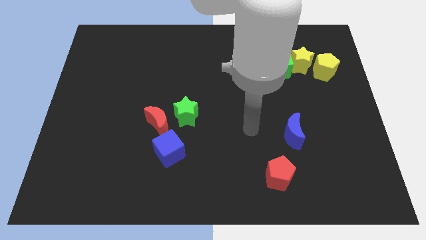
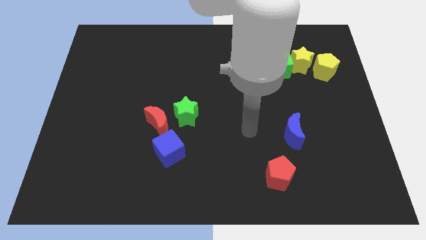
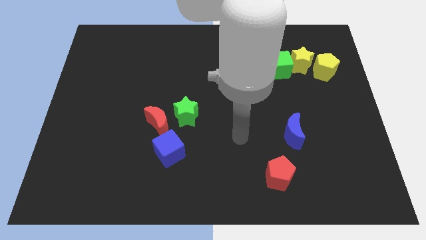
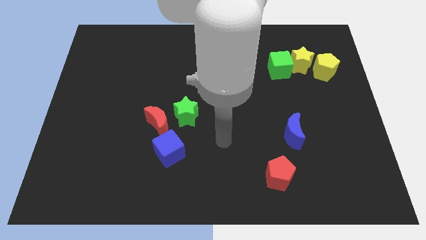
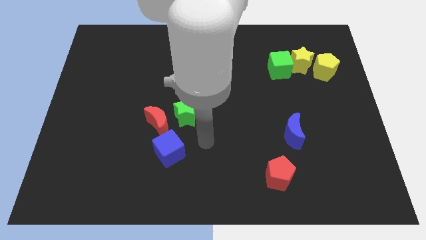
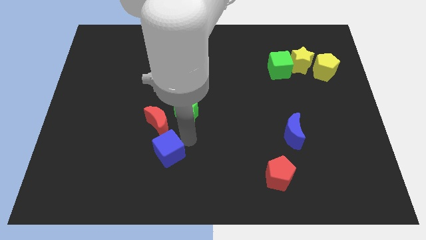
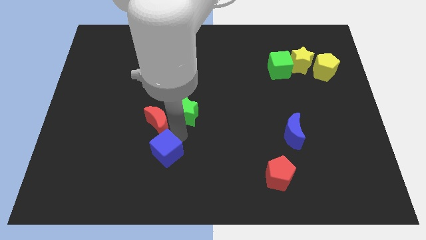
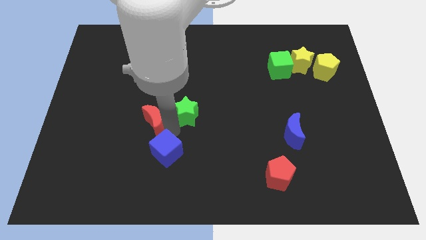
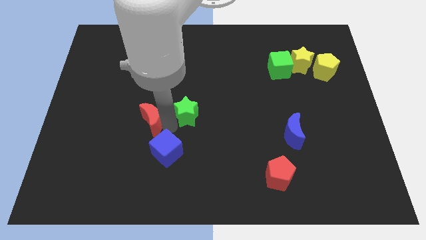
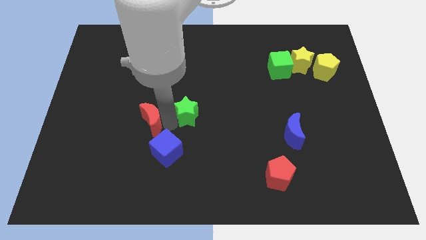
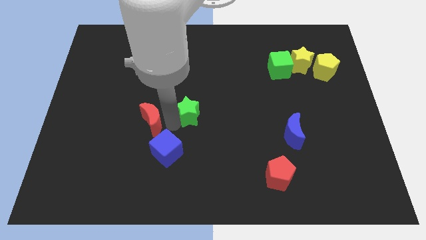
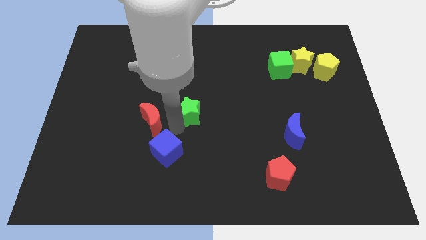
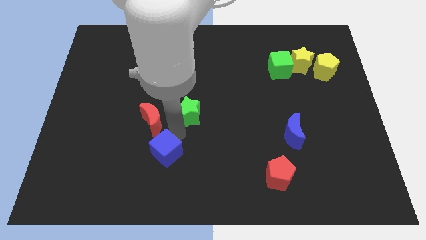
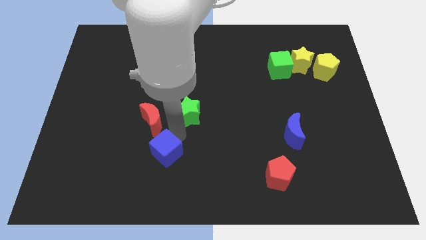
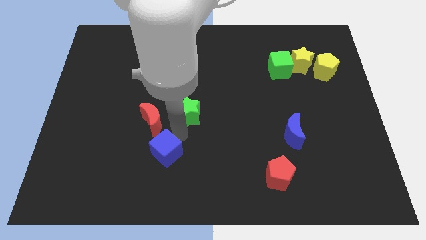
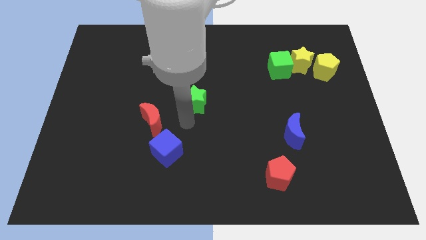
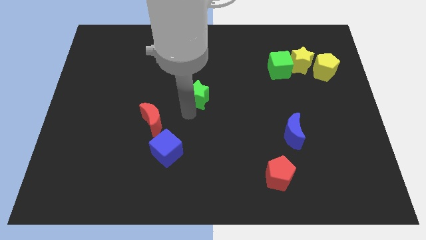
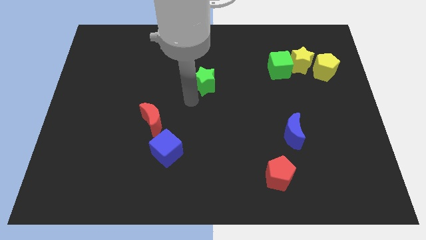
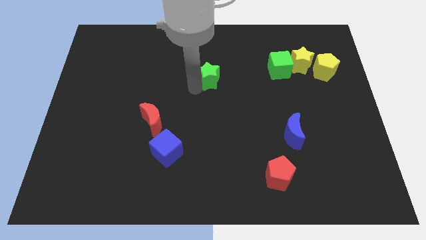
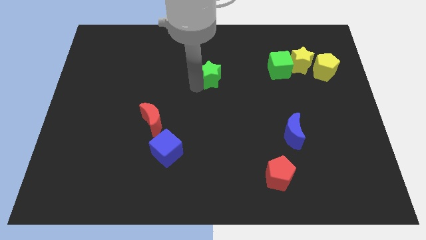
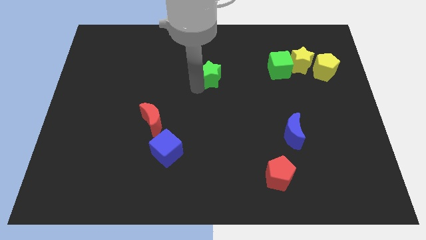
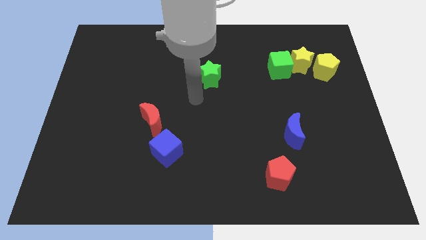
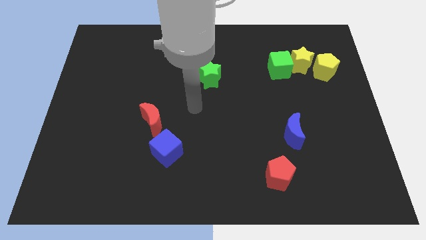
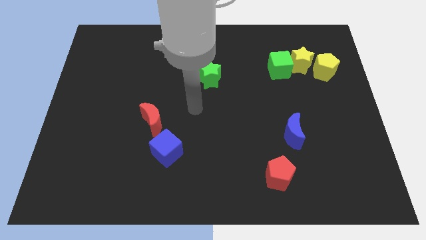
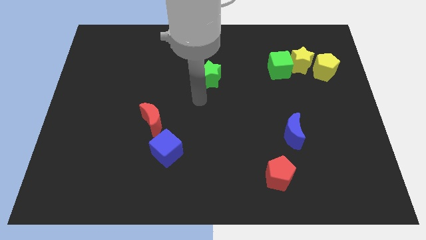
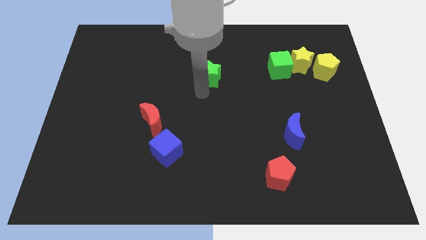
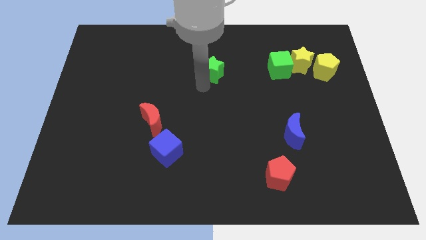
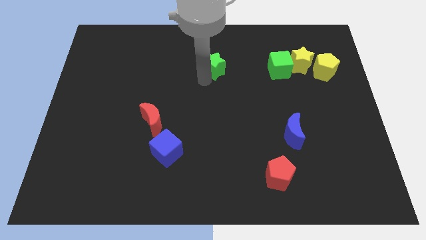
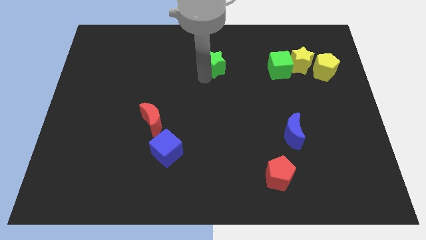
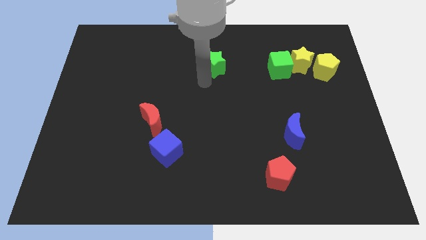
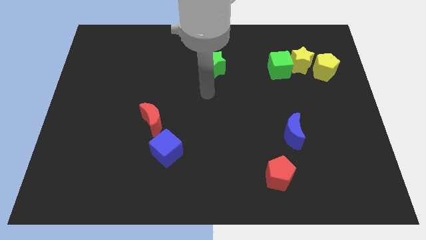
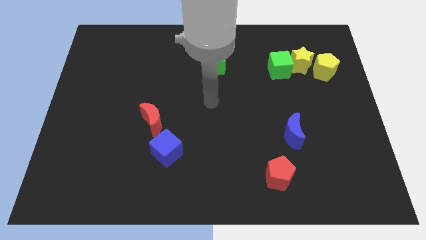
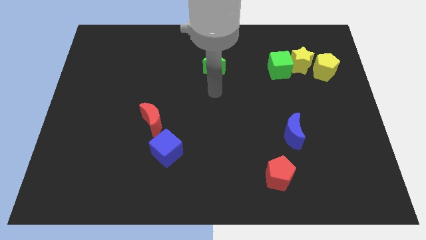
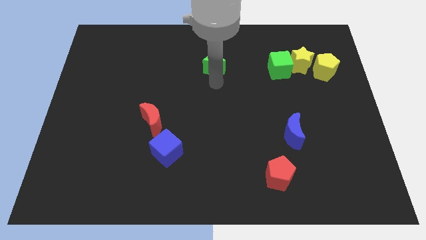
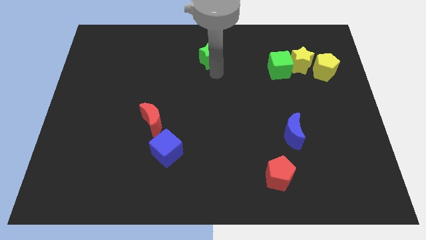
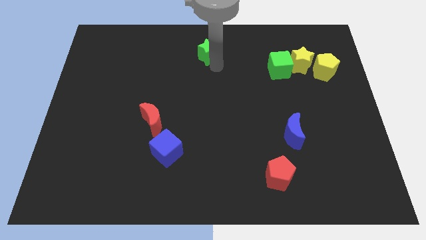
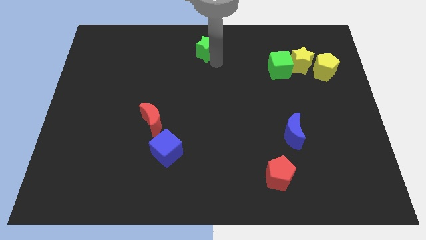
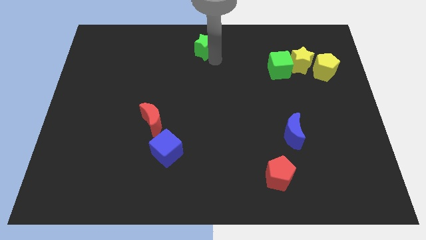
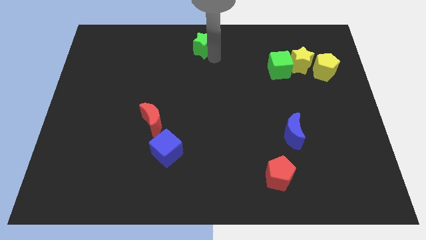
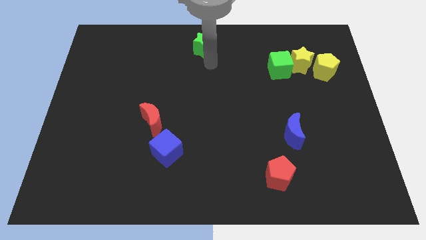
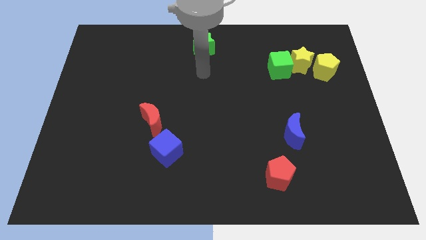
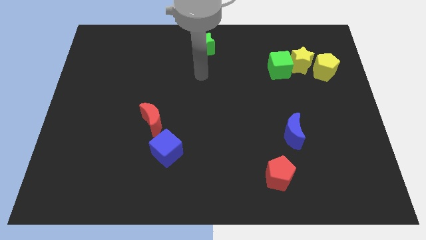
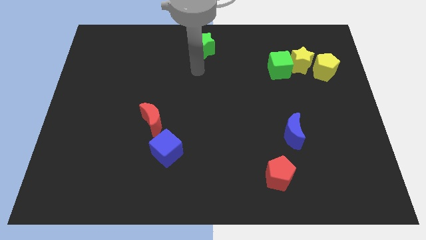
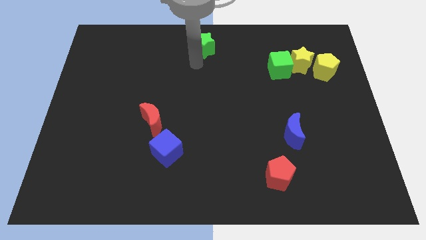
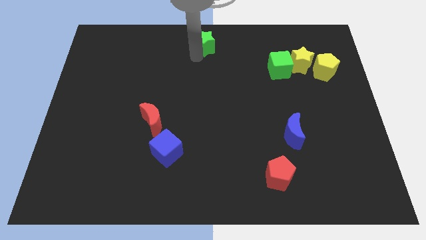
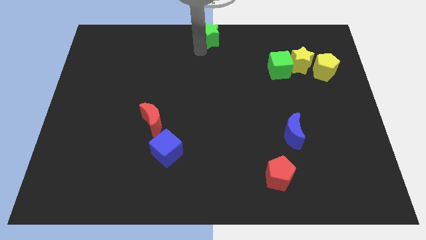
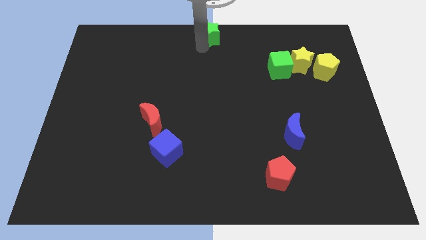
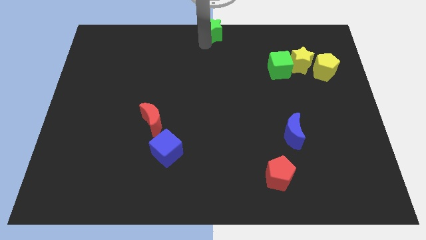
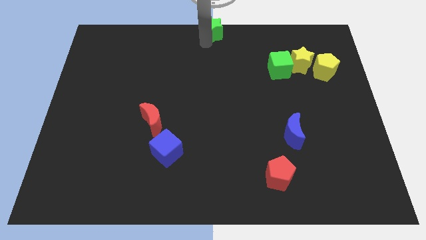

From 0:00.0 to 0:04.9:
move the green star to the top center of the board

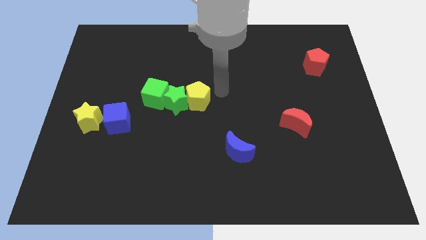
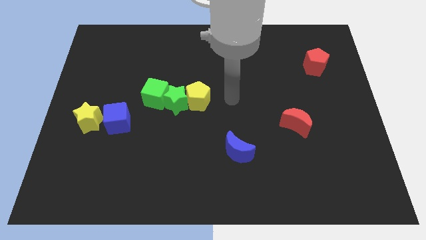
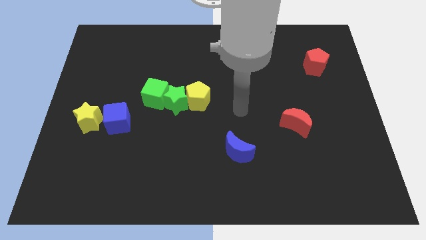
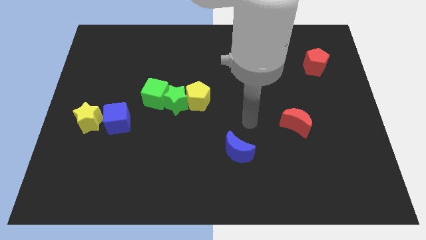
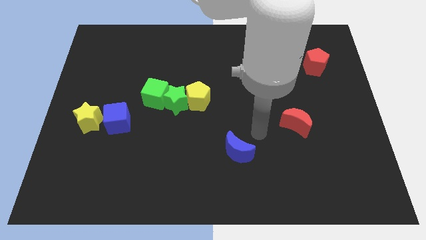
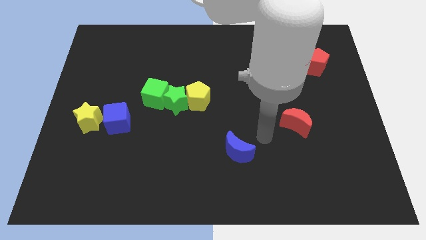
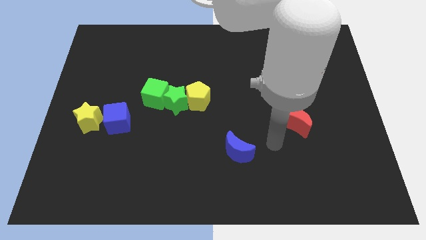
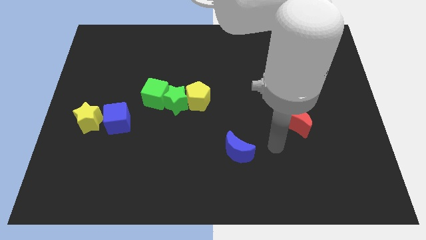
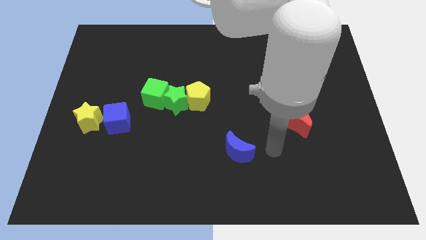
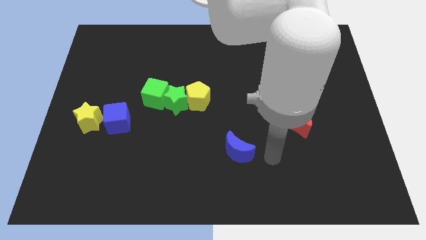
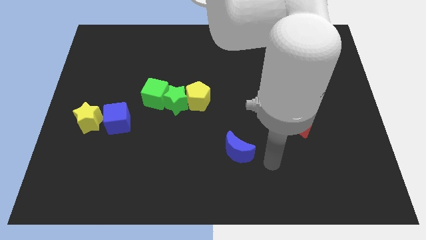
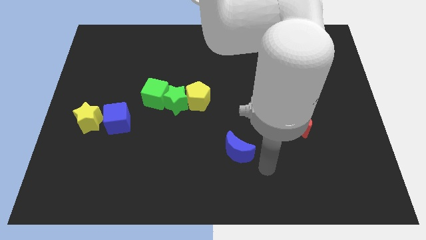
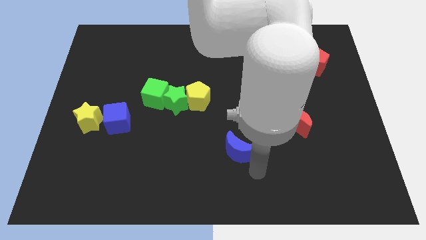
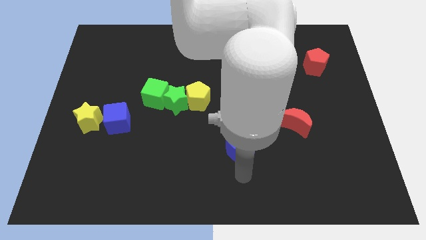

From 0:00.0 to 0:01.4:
place your hand under the blue crescent

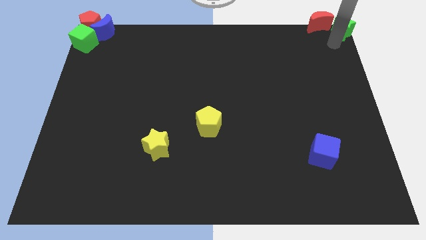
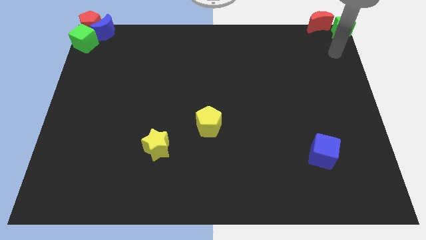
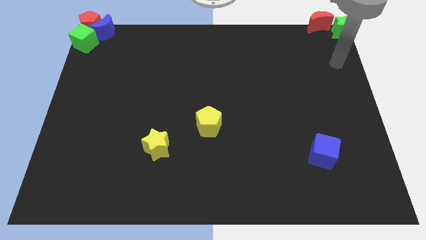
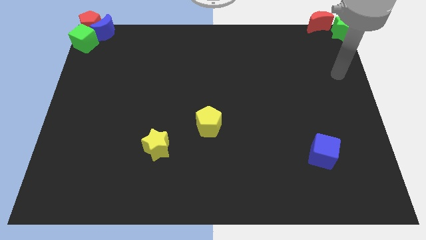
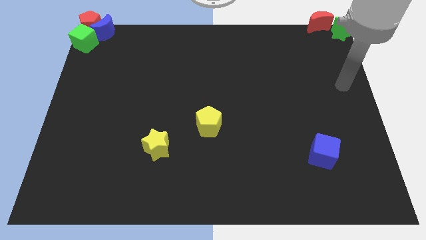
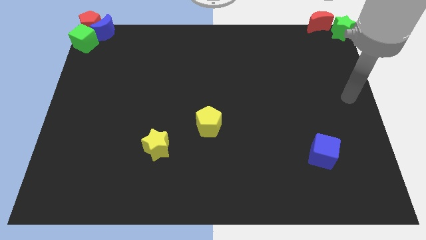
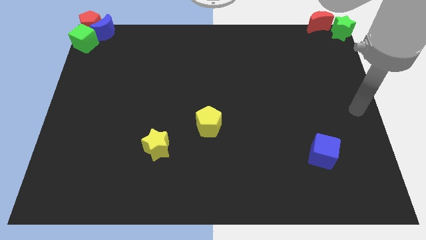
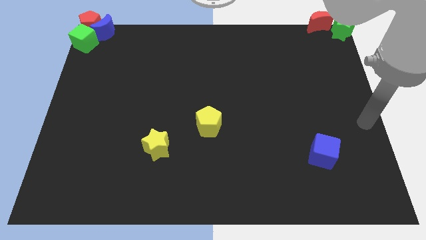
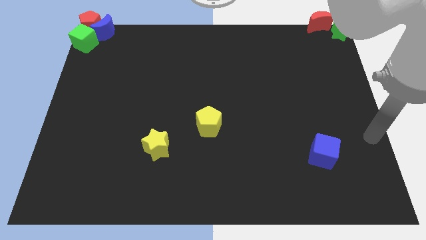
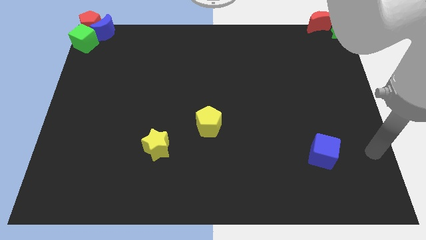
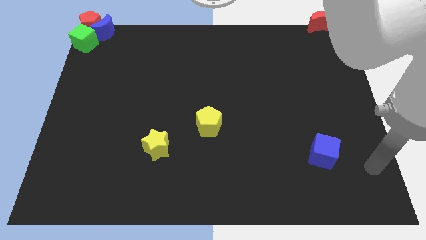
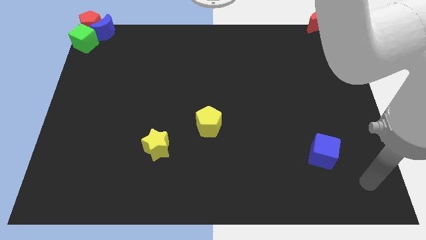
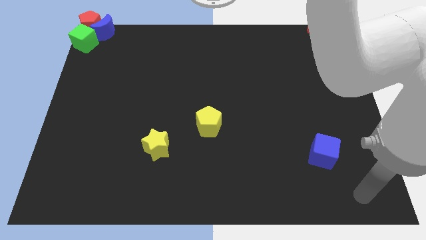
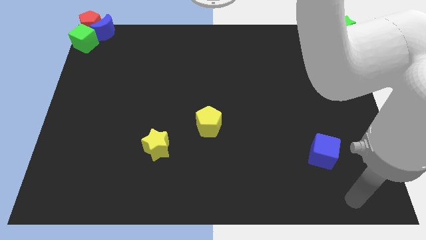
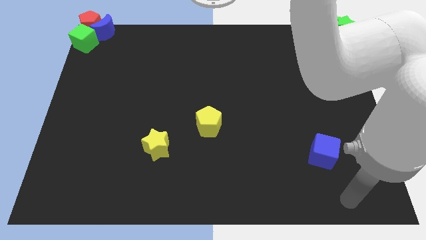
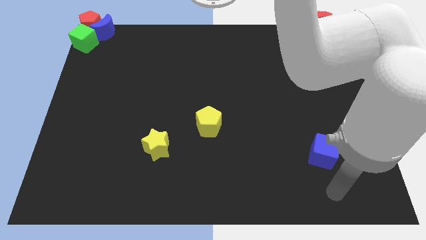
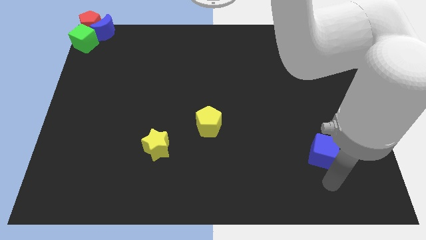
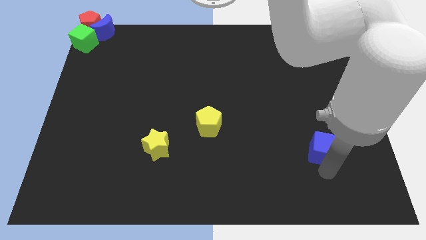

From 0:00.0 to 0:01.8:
move the arm at the bottom of the blue cube

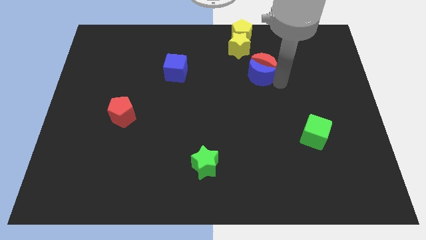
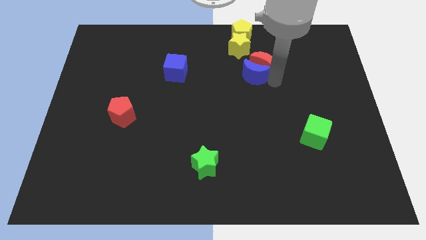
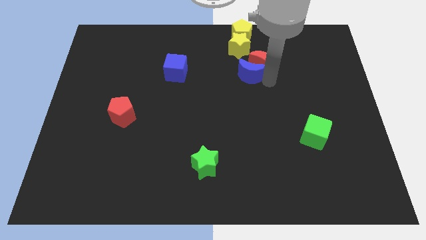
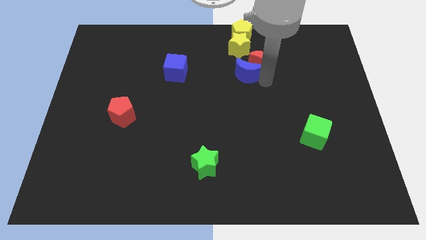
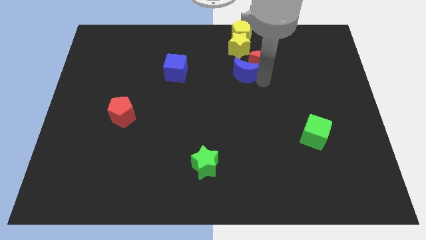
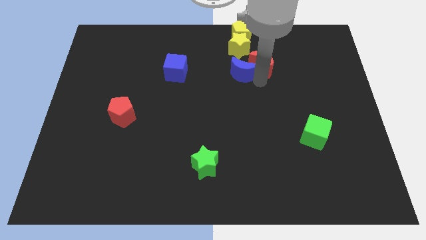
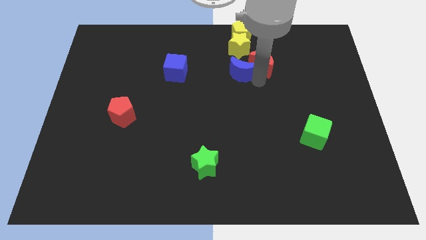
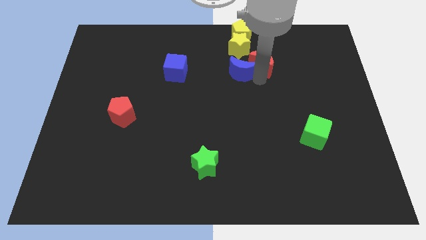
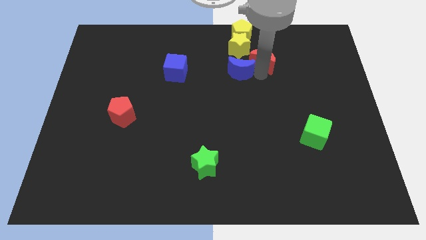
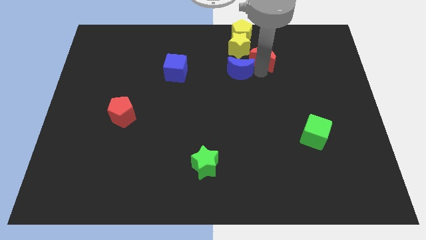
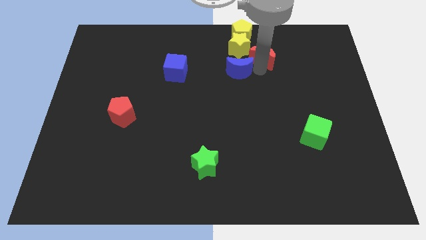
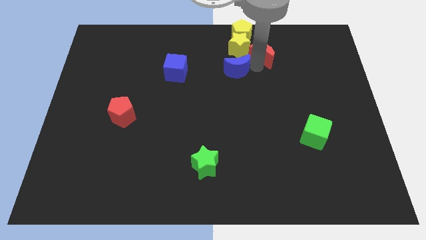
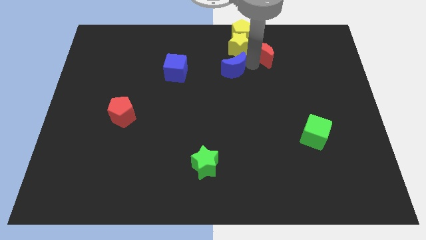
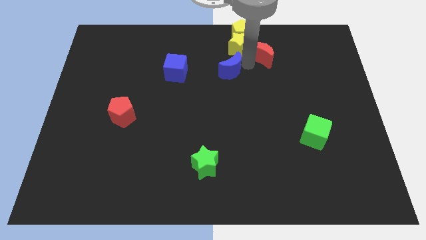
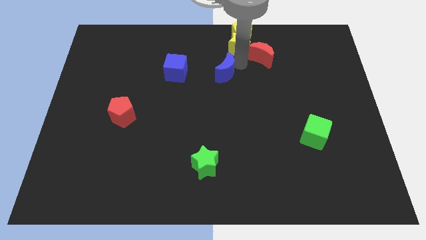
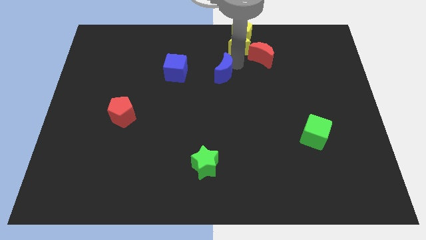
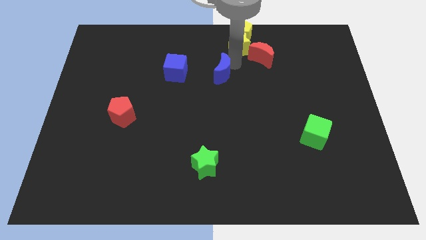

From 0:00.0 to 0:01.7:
push the blue semi circle towards the blue cube
